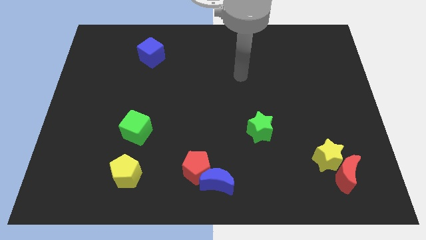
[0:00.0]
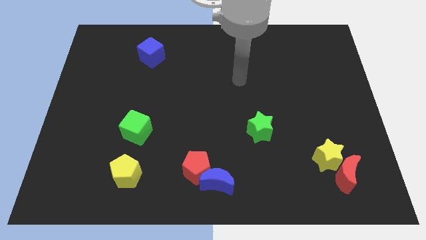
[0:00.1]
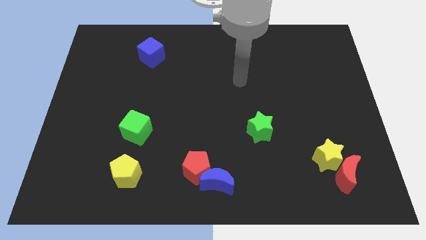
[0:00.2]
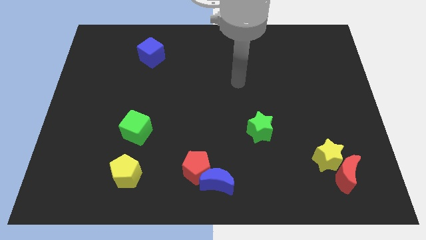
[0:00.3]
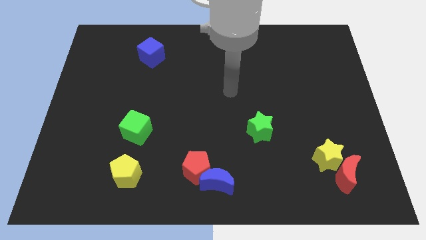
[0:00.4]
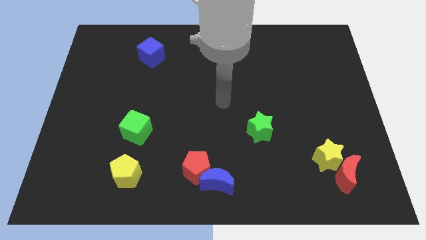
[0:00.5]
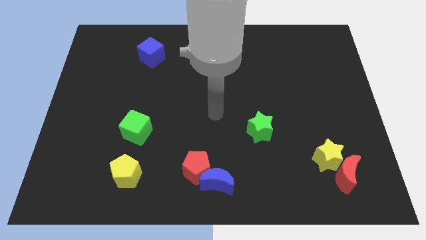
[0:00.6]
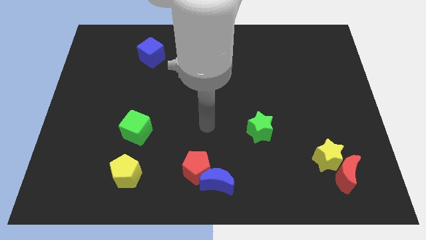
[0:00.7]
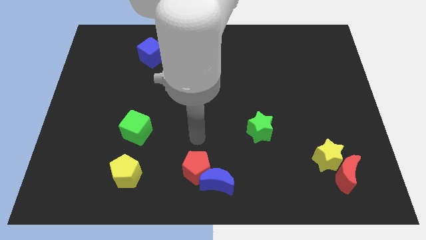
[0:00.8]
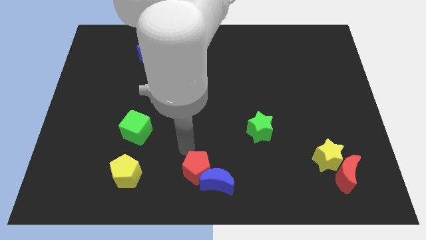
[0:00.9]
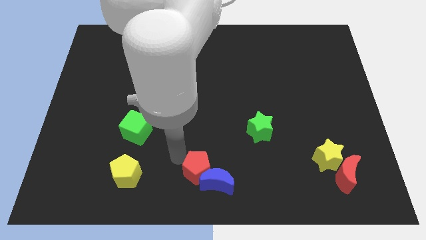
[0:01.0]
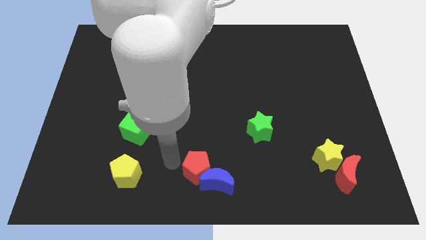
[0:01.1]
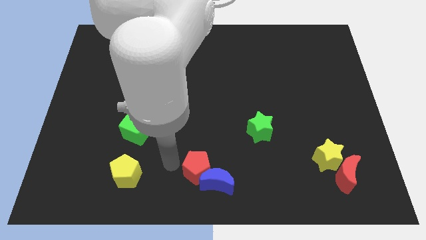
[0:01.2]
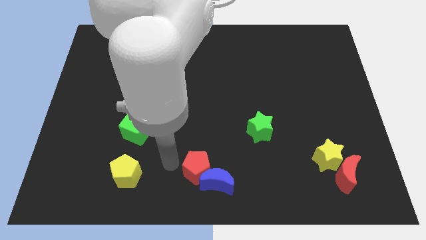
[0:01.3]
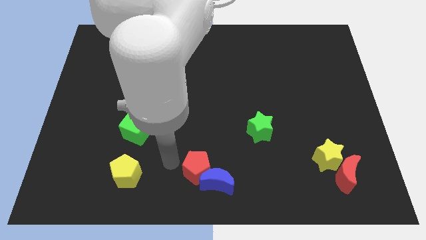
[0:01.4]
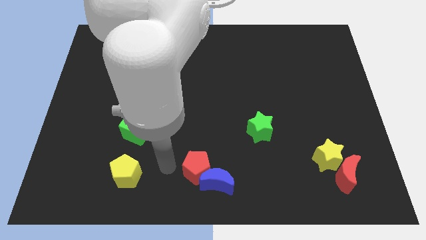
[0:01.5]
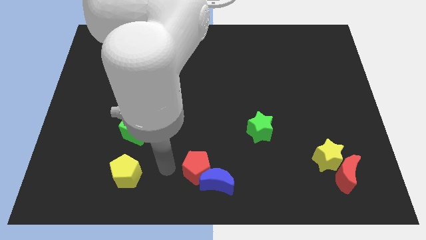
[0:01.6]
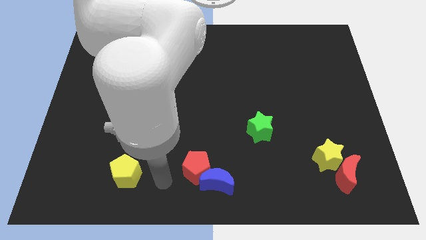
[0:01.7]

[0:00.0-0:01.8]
point your arm to the left side of red pentagon

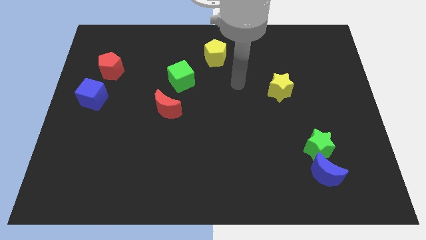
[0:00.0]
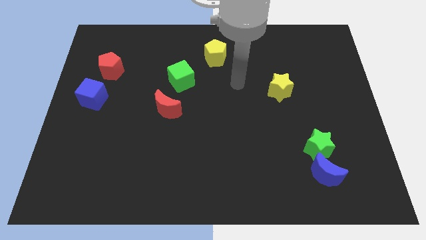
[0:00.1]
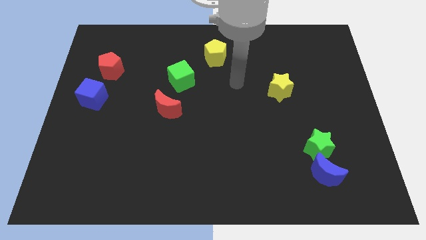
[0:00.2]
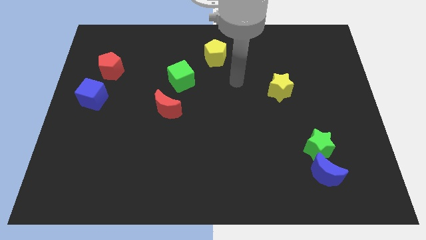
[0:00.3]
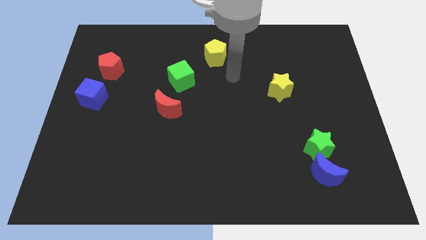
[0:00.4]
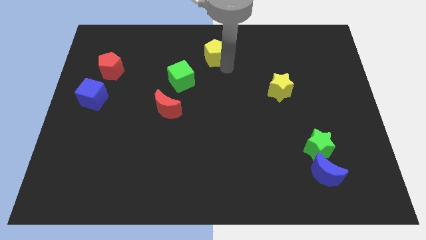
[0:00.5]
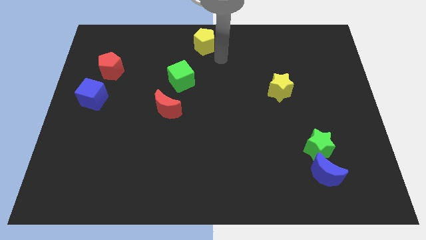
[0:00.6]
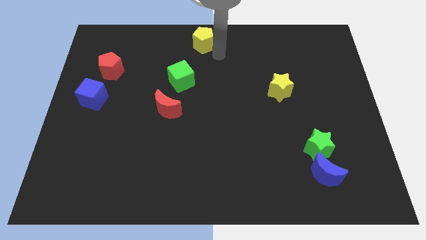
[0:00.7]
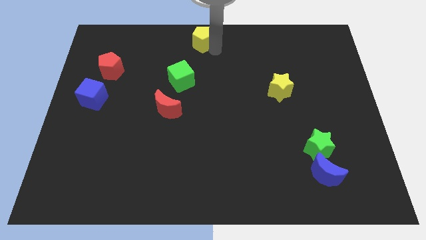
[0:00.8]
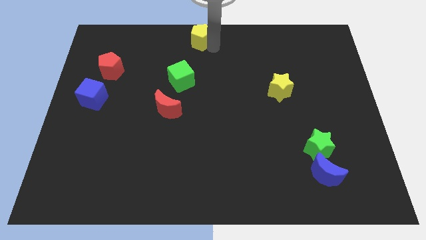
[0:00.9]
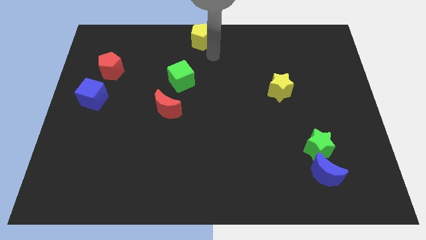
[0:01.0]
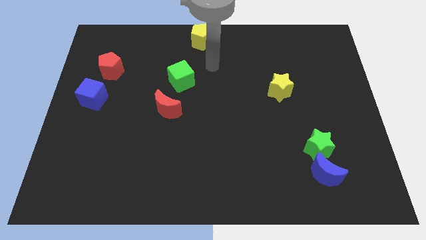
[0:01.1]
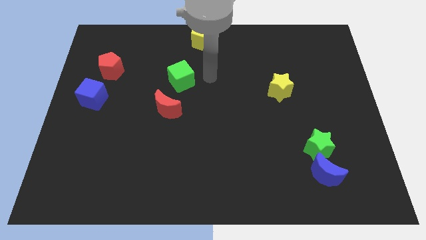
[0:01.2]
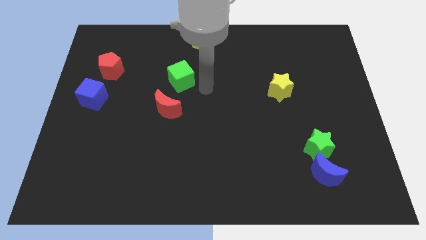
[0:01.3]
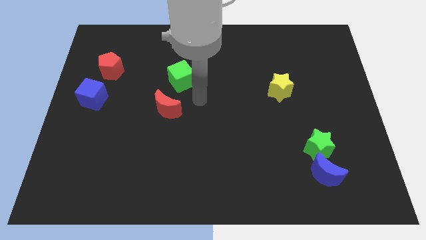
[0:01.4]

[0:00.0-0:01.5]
push the yellow pentagon to the top center of the board

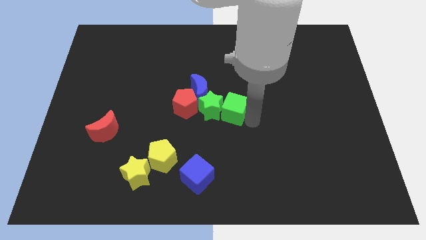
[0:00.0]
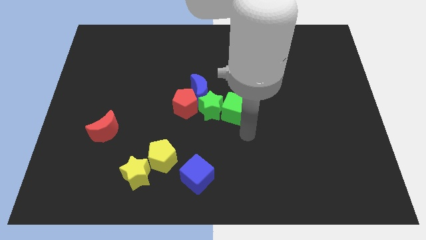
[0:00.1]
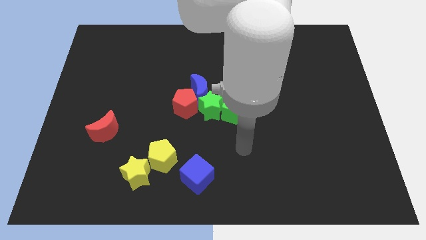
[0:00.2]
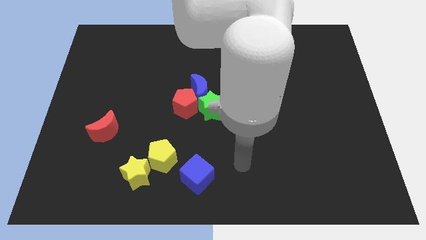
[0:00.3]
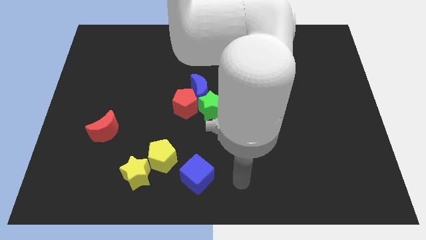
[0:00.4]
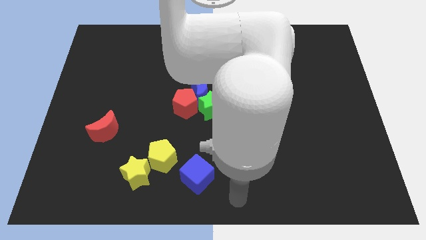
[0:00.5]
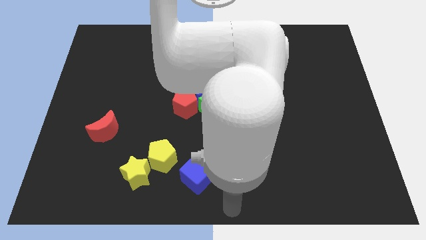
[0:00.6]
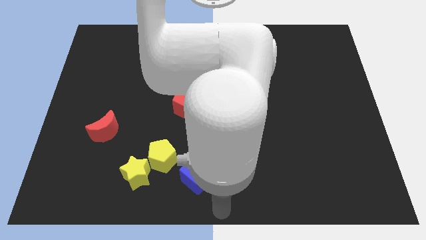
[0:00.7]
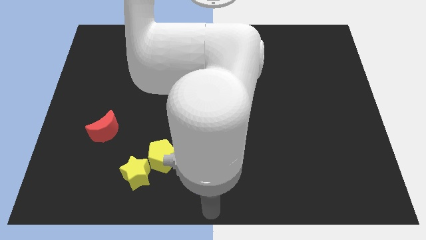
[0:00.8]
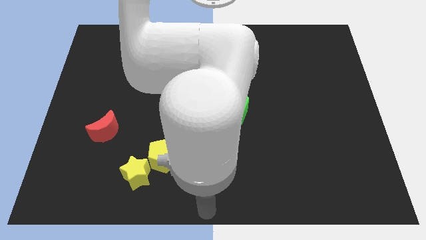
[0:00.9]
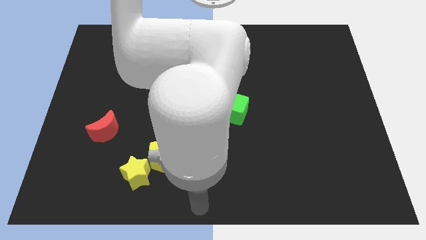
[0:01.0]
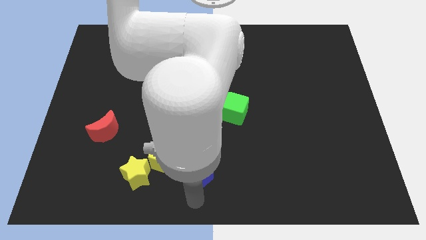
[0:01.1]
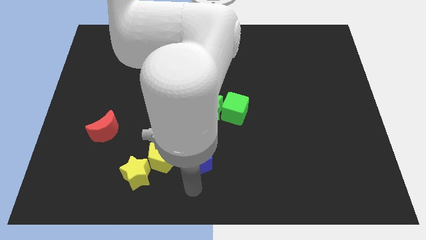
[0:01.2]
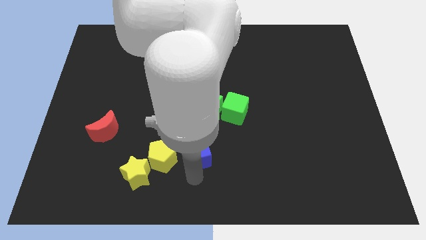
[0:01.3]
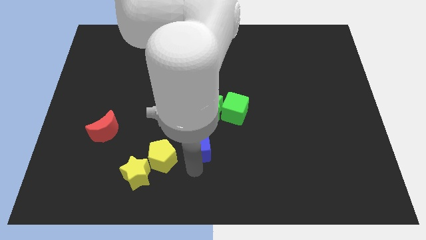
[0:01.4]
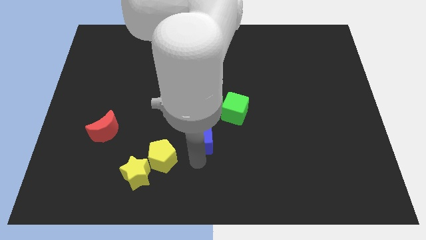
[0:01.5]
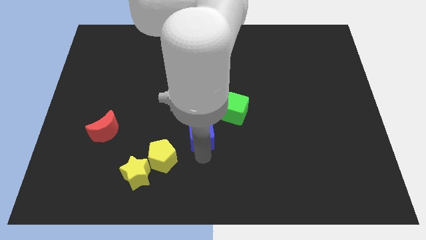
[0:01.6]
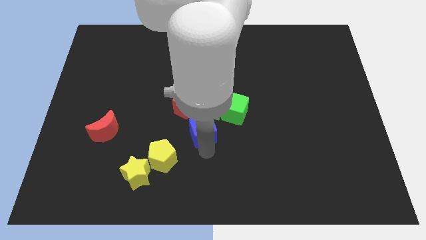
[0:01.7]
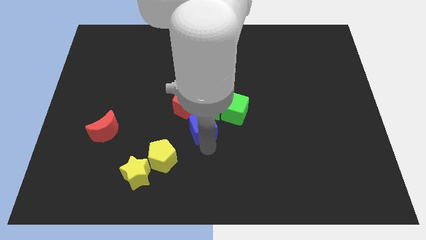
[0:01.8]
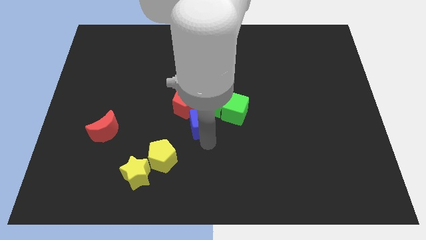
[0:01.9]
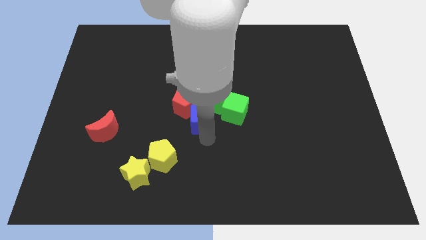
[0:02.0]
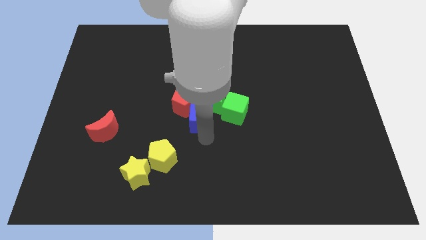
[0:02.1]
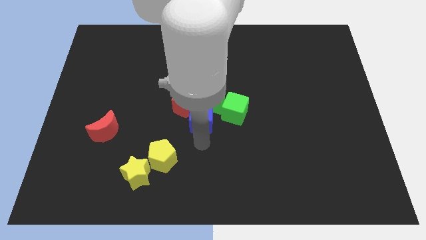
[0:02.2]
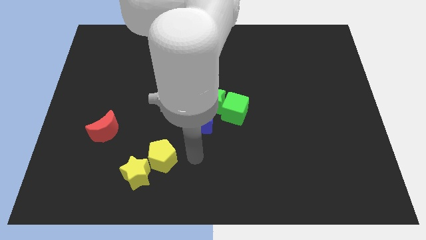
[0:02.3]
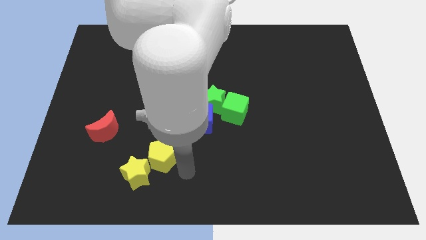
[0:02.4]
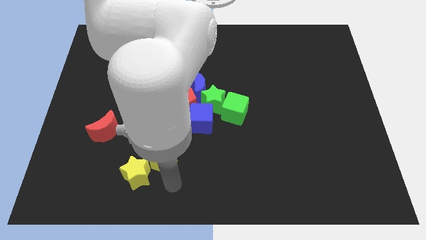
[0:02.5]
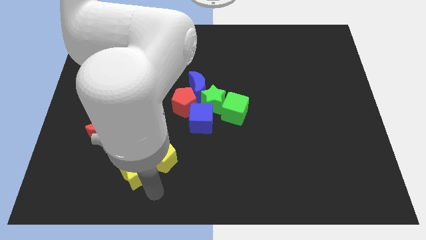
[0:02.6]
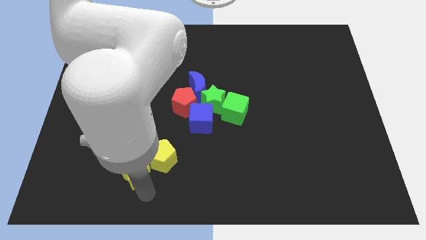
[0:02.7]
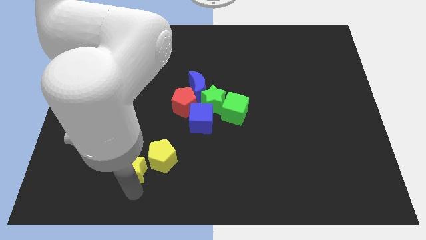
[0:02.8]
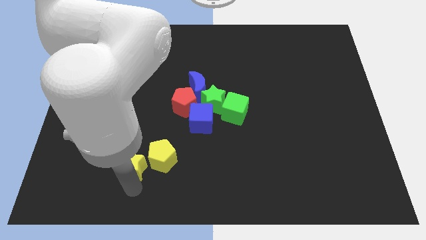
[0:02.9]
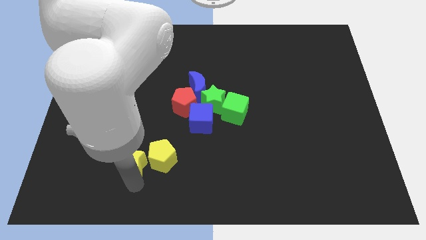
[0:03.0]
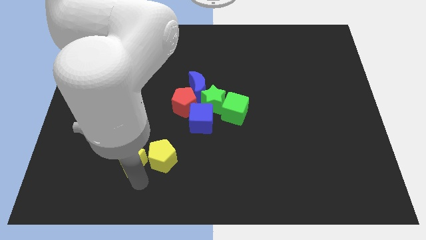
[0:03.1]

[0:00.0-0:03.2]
push the blue into the group of blocks

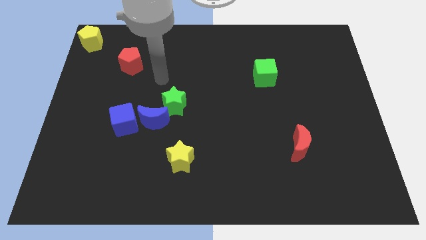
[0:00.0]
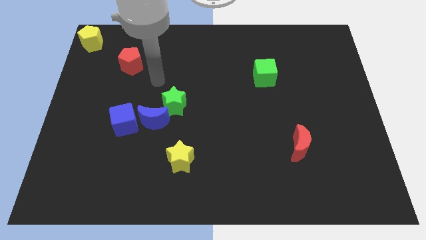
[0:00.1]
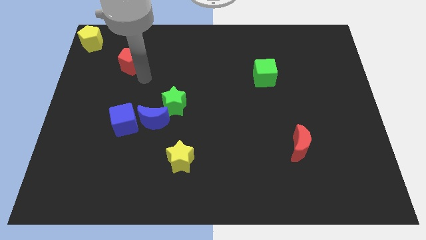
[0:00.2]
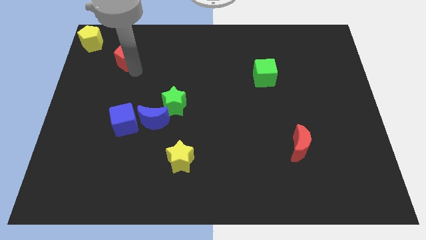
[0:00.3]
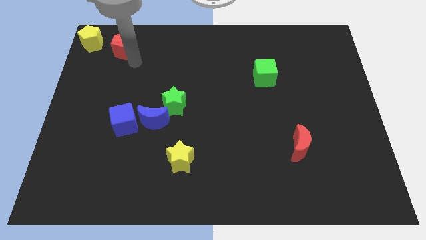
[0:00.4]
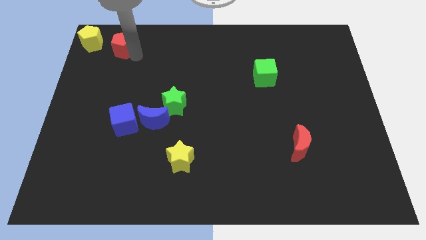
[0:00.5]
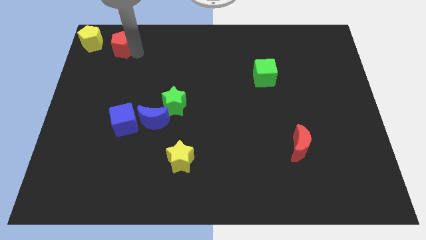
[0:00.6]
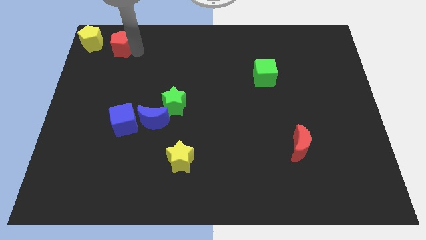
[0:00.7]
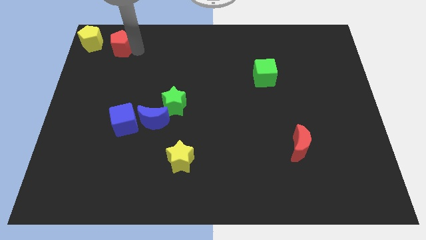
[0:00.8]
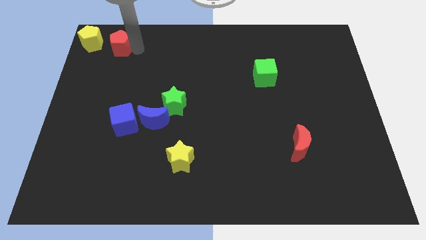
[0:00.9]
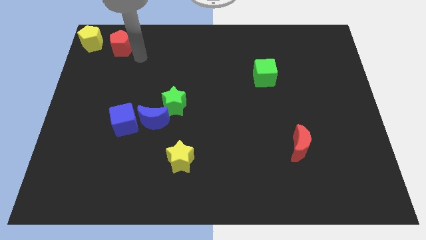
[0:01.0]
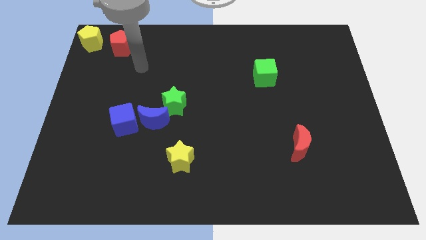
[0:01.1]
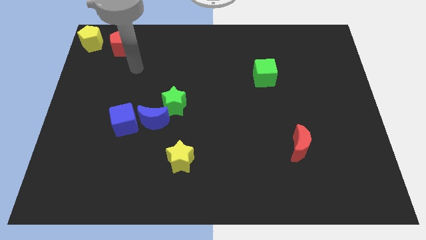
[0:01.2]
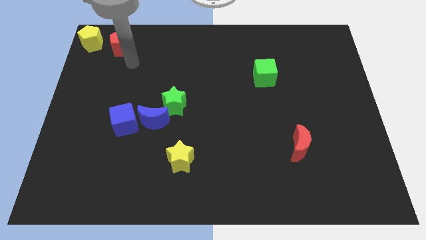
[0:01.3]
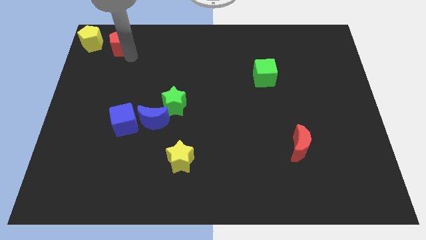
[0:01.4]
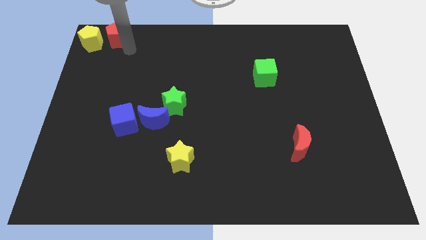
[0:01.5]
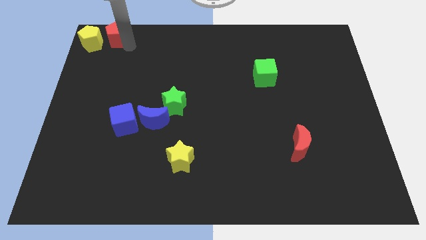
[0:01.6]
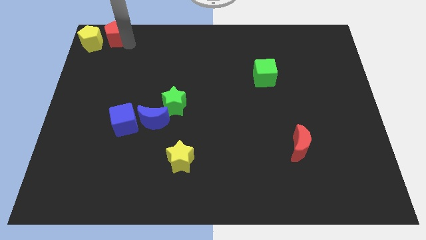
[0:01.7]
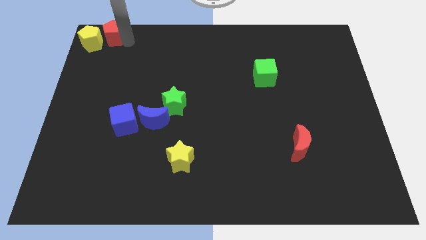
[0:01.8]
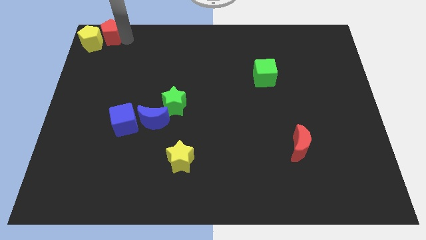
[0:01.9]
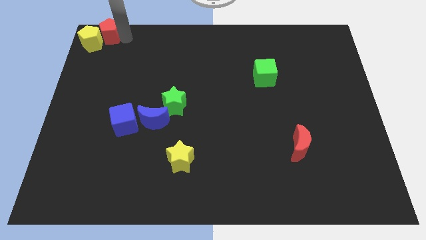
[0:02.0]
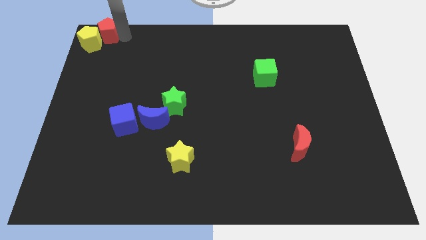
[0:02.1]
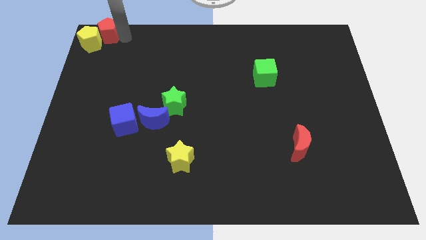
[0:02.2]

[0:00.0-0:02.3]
put the red pentagon and the yellow pentagon together
